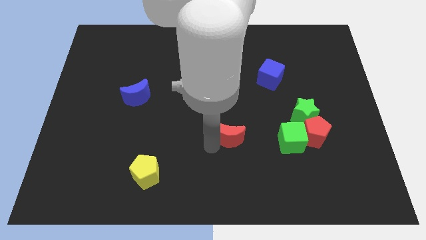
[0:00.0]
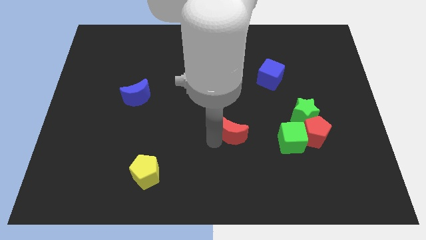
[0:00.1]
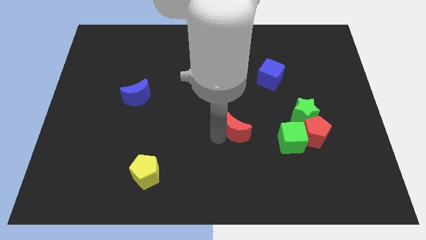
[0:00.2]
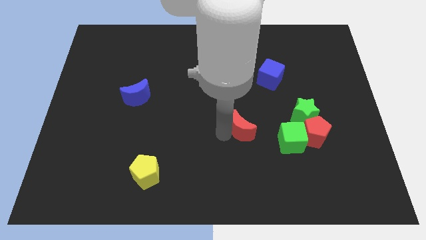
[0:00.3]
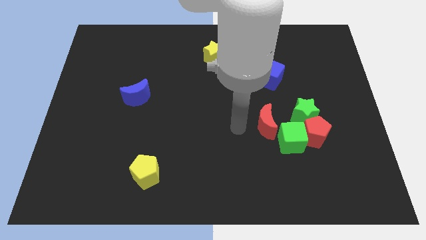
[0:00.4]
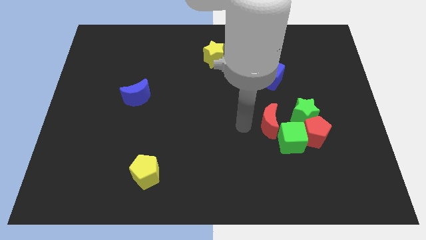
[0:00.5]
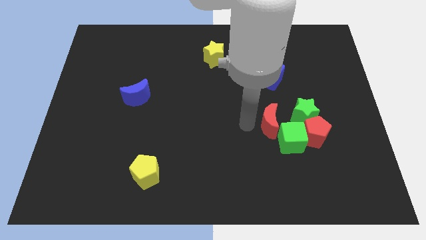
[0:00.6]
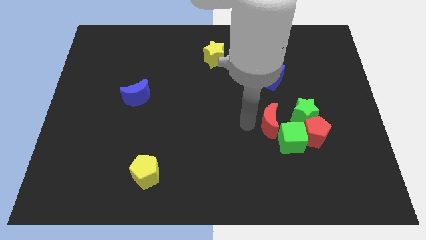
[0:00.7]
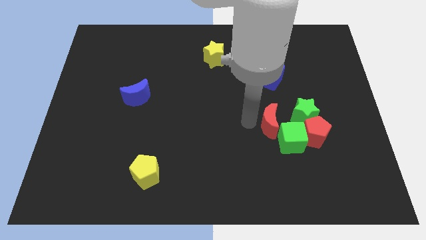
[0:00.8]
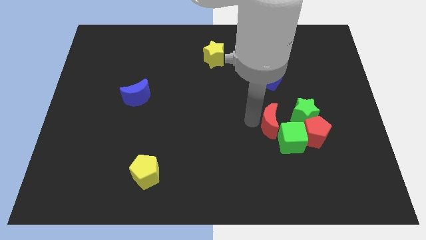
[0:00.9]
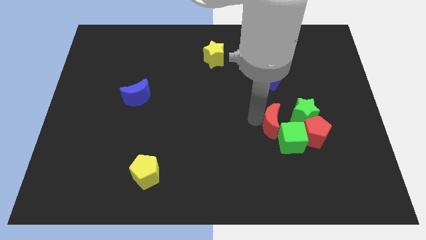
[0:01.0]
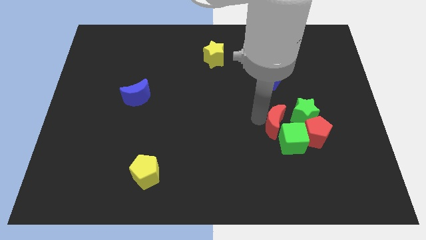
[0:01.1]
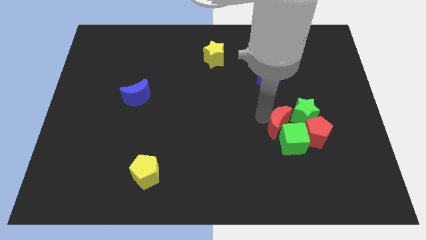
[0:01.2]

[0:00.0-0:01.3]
push the red crescent in to green cube

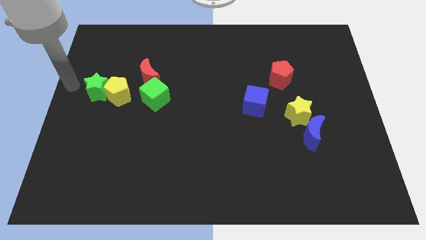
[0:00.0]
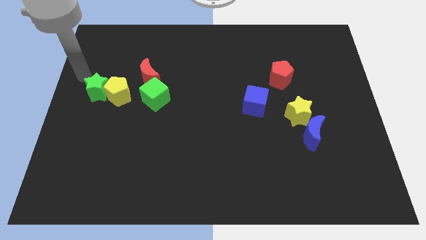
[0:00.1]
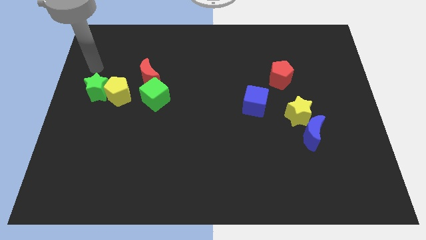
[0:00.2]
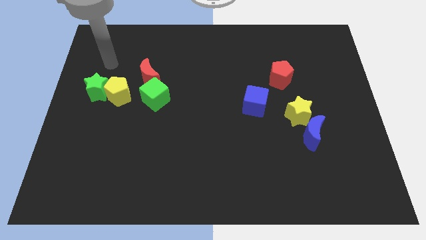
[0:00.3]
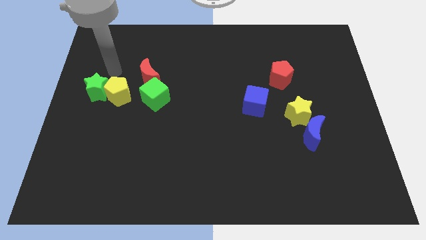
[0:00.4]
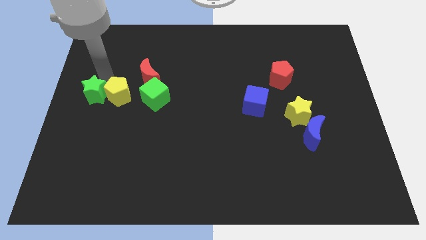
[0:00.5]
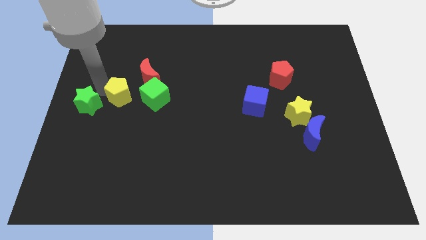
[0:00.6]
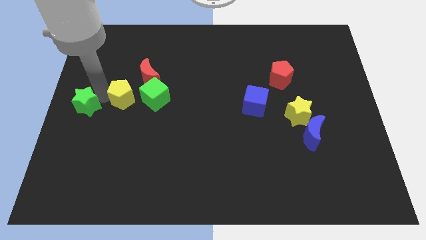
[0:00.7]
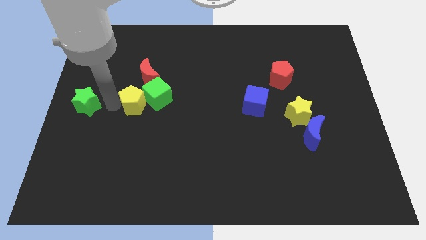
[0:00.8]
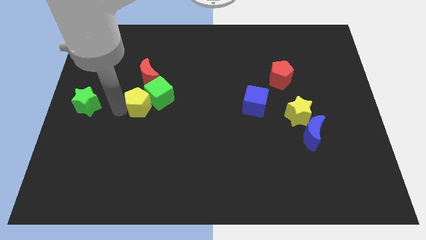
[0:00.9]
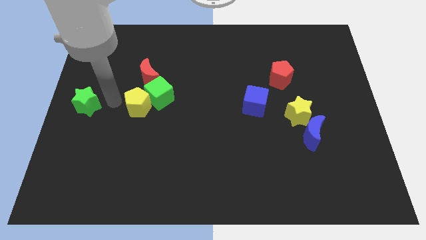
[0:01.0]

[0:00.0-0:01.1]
push the yellow pentagon into the left side of the green cube

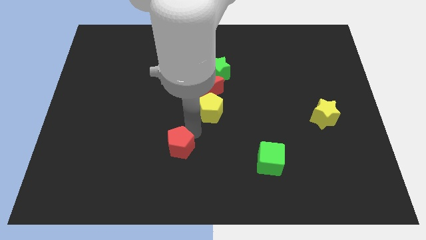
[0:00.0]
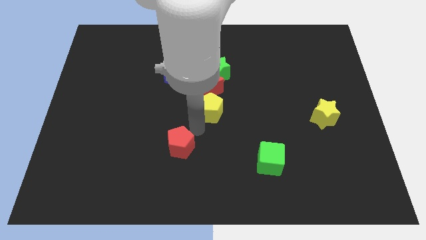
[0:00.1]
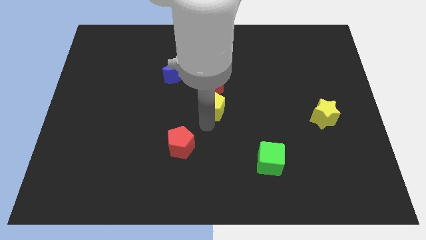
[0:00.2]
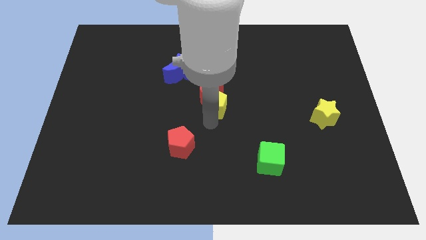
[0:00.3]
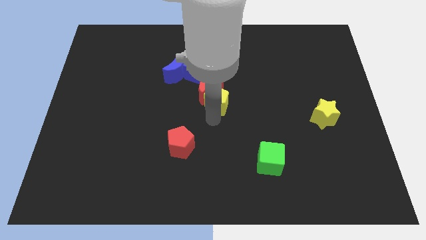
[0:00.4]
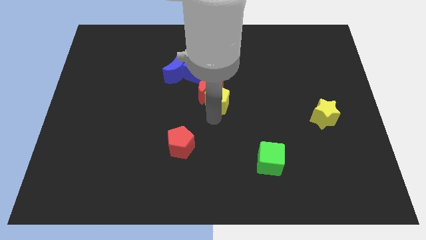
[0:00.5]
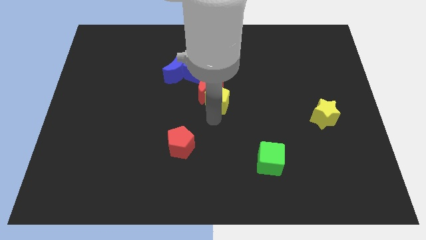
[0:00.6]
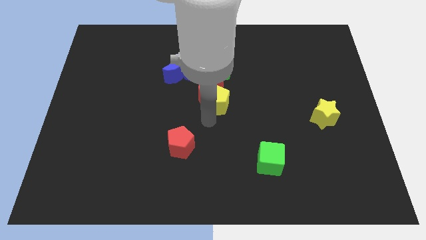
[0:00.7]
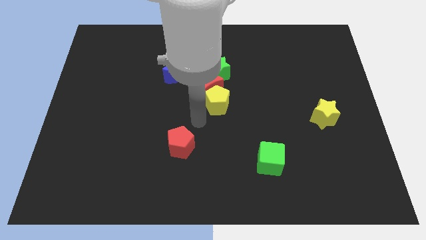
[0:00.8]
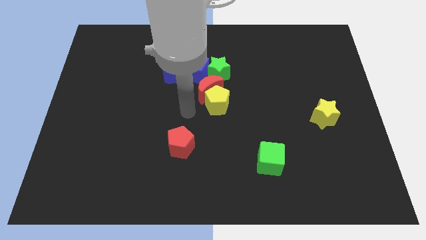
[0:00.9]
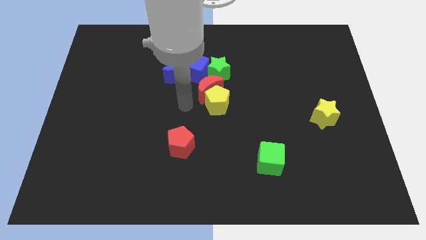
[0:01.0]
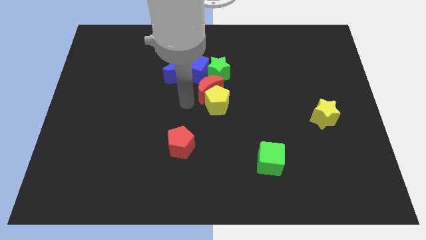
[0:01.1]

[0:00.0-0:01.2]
push the yellow pentagon into the red moon

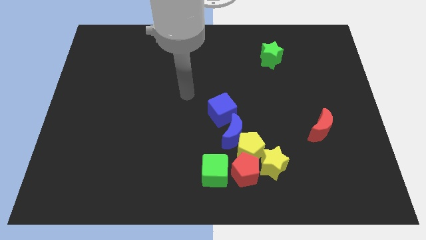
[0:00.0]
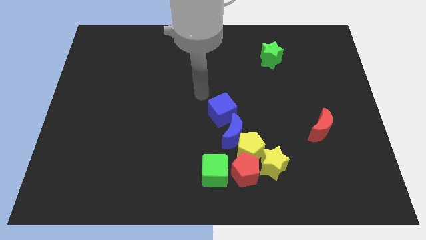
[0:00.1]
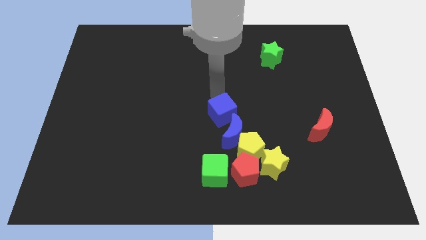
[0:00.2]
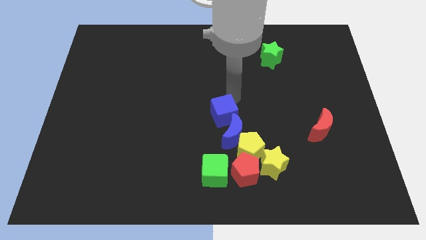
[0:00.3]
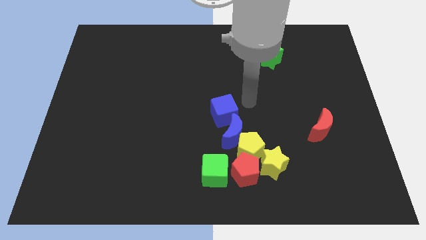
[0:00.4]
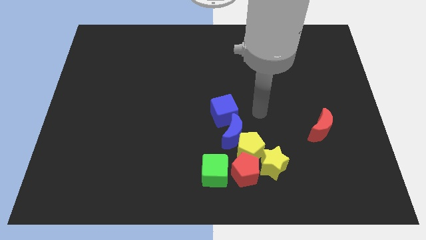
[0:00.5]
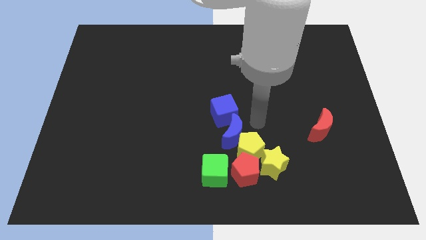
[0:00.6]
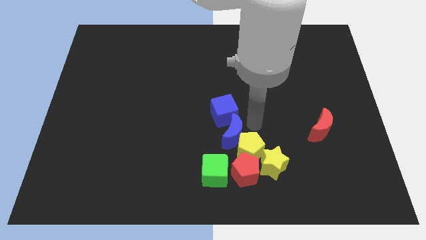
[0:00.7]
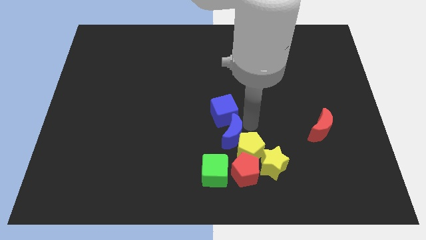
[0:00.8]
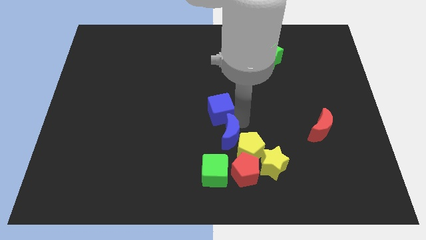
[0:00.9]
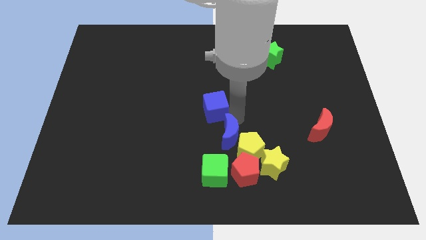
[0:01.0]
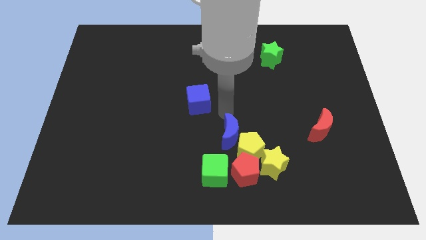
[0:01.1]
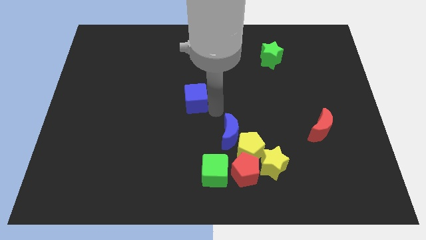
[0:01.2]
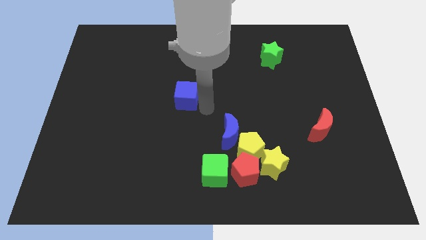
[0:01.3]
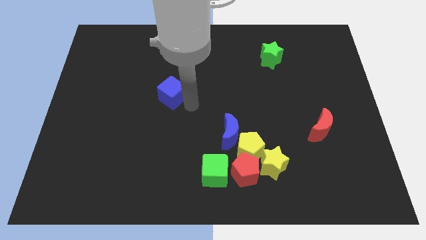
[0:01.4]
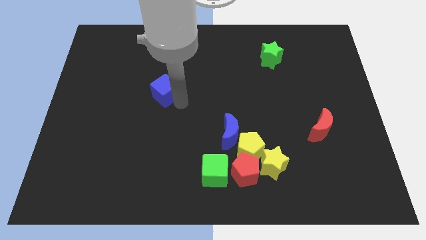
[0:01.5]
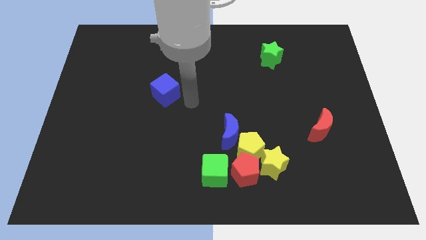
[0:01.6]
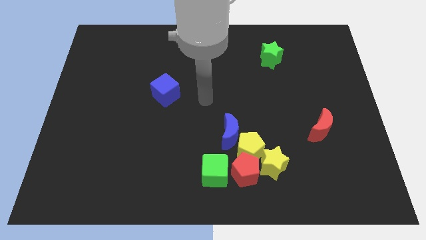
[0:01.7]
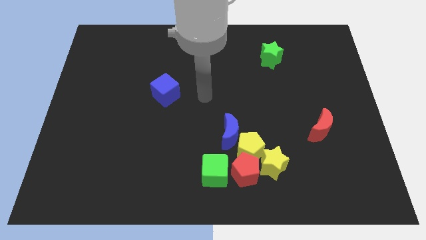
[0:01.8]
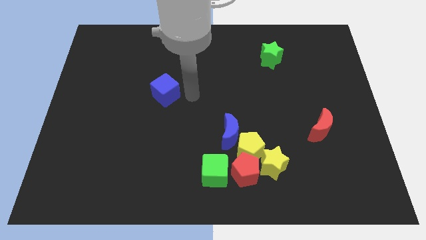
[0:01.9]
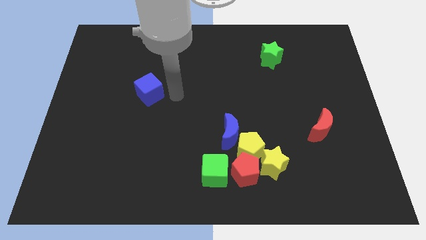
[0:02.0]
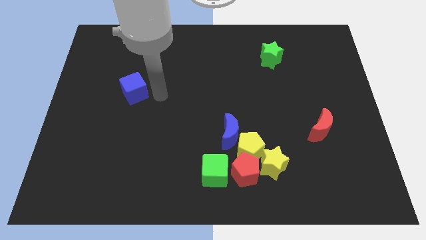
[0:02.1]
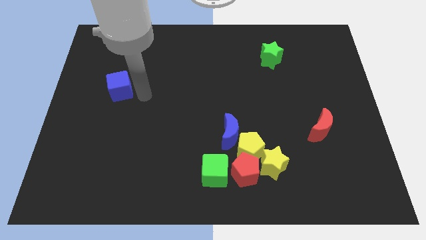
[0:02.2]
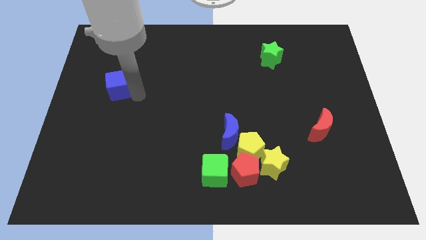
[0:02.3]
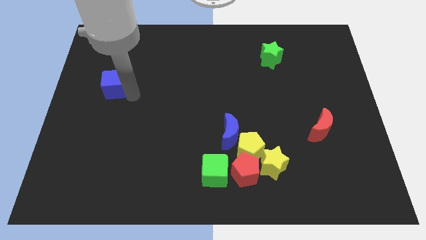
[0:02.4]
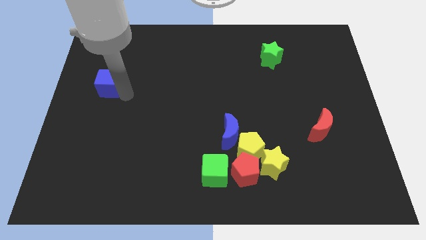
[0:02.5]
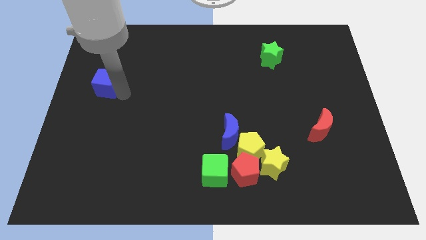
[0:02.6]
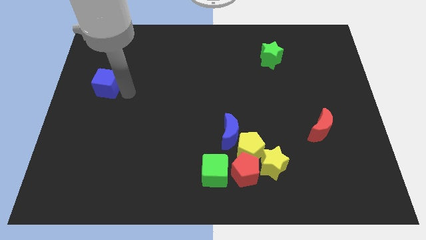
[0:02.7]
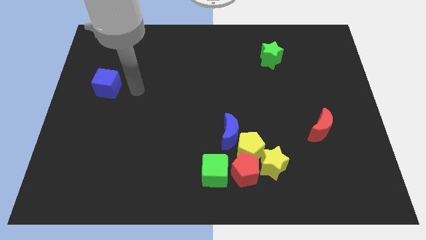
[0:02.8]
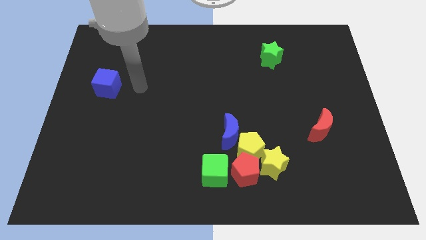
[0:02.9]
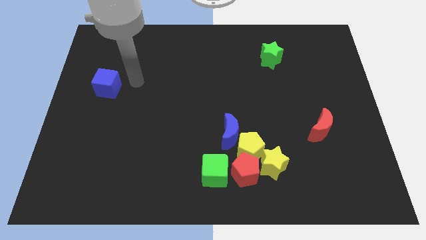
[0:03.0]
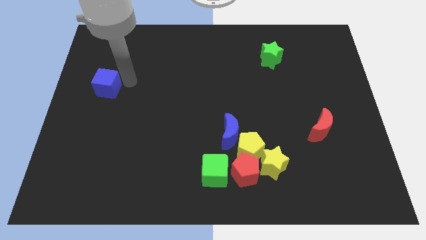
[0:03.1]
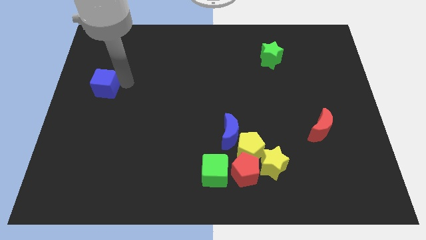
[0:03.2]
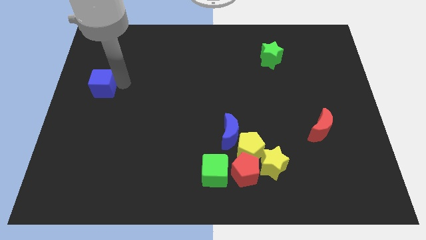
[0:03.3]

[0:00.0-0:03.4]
move the blue cube towards the center left

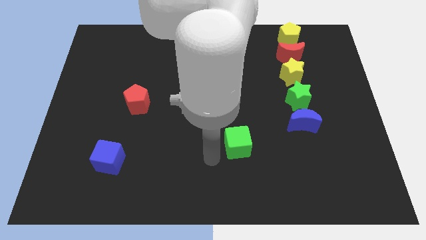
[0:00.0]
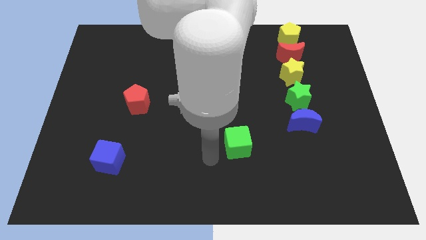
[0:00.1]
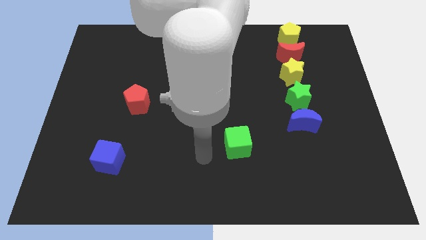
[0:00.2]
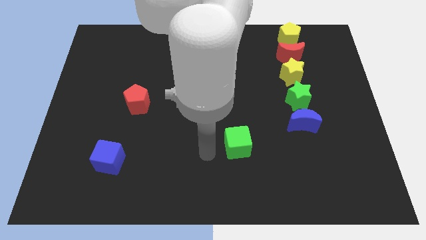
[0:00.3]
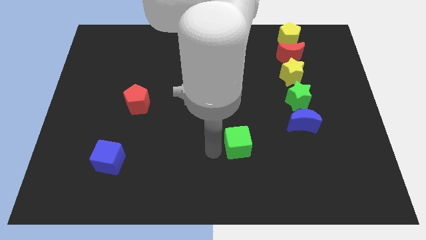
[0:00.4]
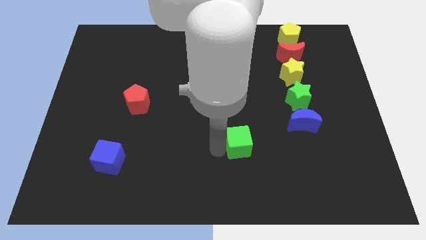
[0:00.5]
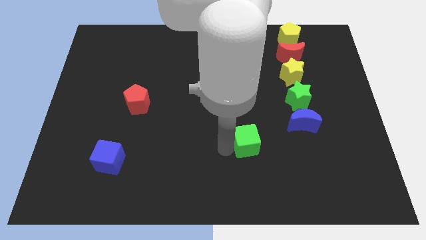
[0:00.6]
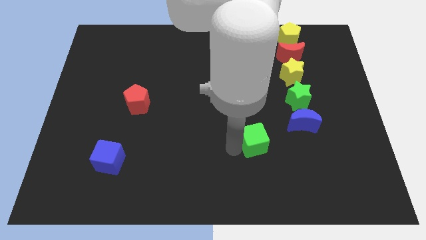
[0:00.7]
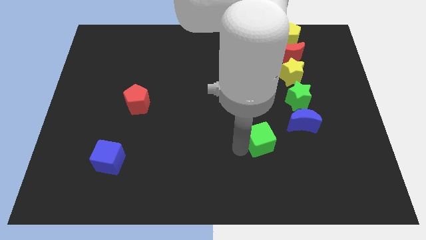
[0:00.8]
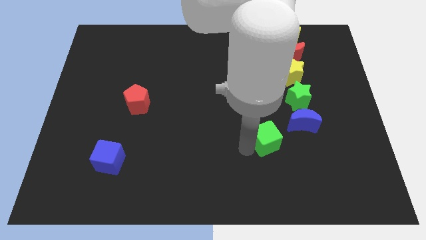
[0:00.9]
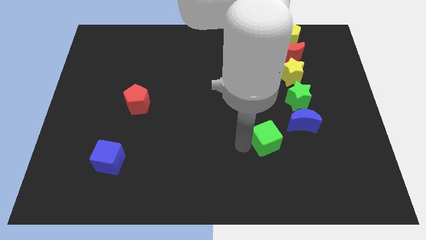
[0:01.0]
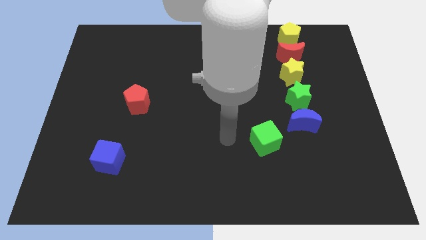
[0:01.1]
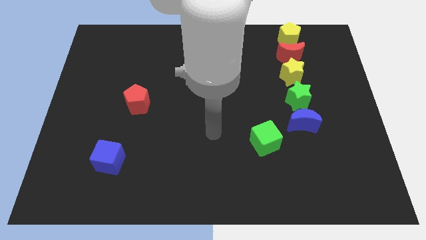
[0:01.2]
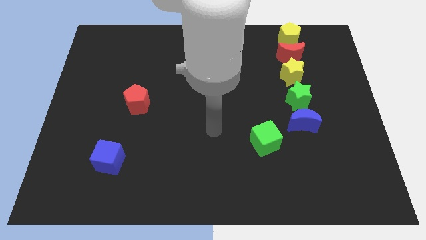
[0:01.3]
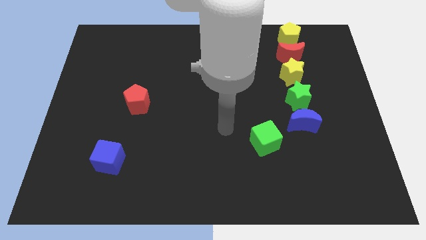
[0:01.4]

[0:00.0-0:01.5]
move green cube slightly to the right side of board

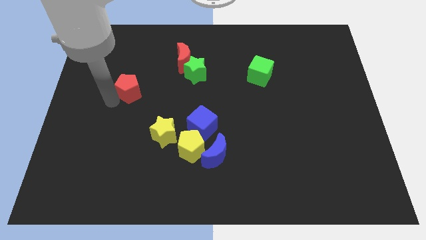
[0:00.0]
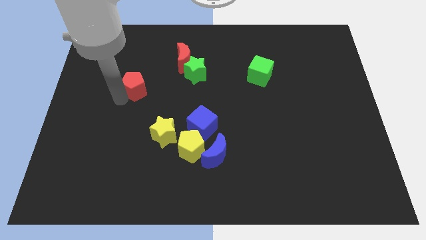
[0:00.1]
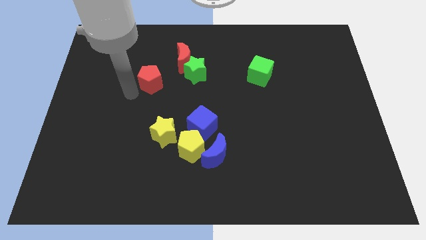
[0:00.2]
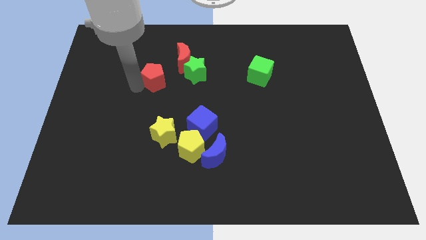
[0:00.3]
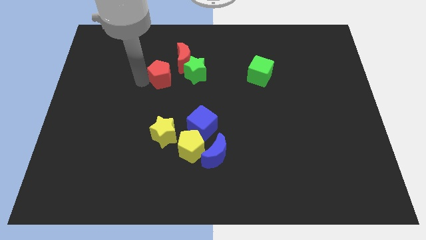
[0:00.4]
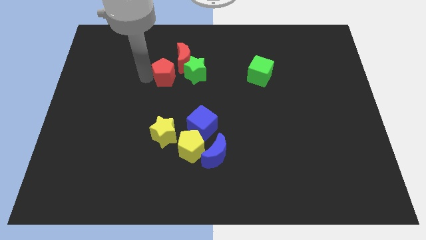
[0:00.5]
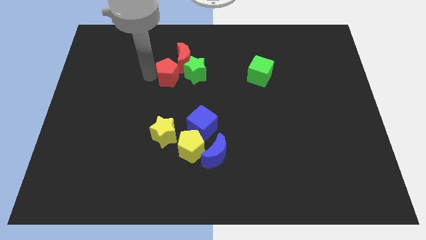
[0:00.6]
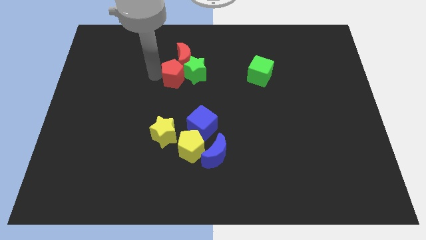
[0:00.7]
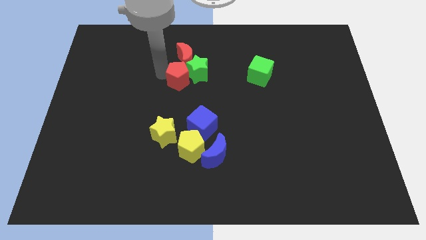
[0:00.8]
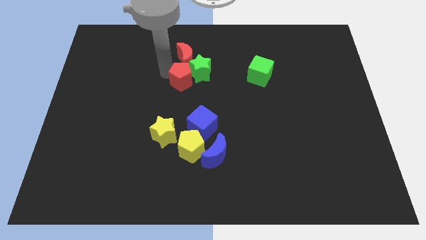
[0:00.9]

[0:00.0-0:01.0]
slide red pentagon towards green star
